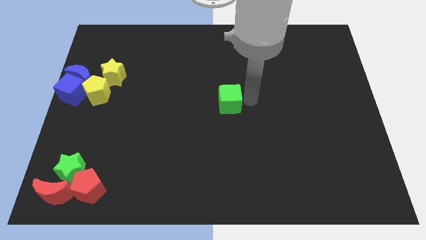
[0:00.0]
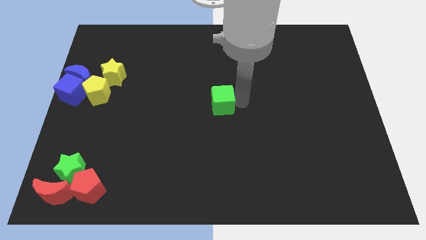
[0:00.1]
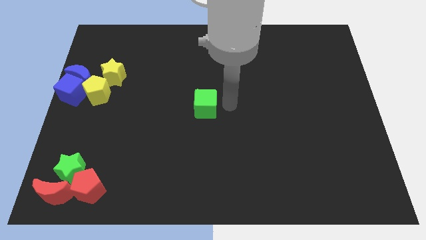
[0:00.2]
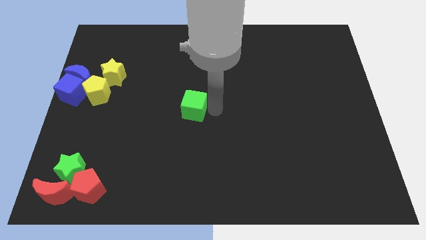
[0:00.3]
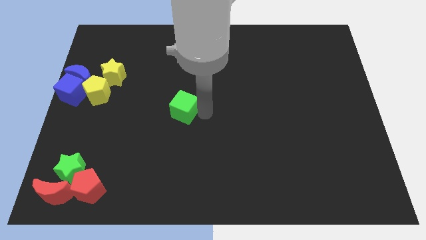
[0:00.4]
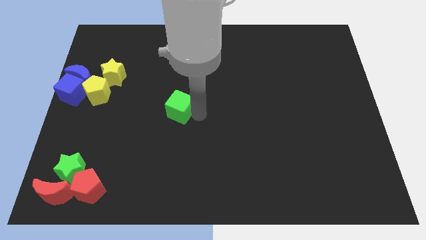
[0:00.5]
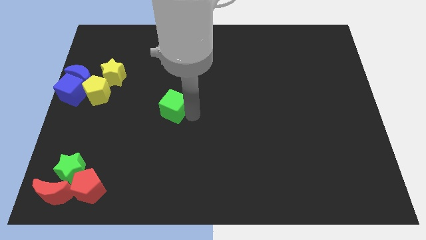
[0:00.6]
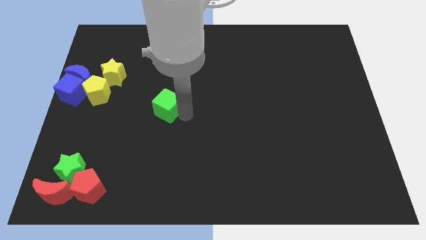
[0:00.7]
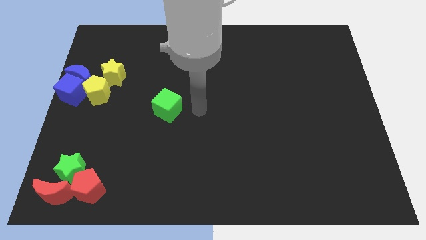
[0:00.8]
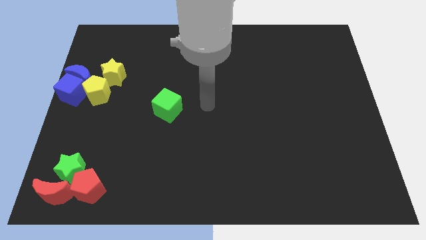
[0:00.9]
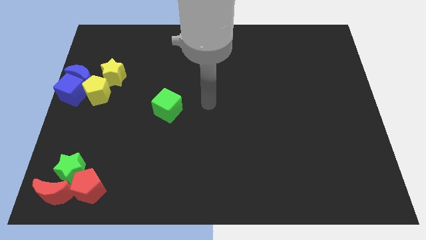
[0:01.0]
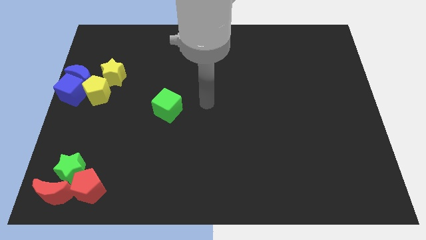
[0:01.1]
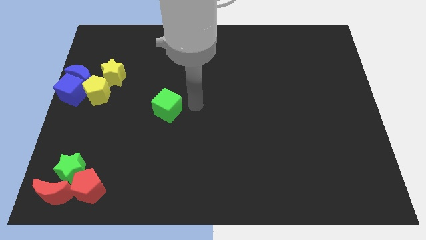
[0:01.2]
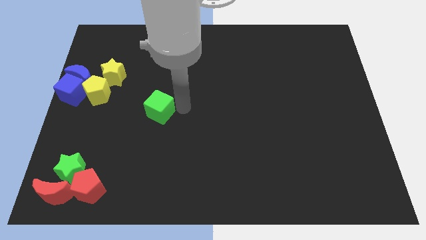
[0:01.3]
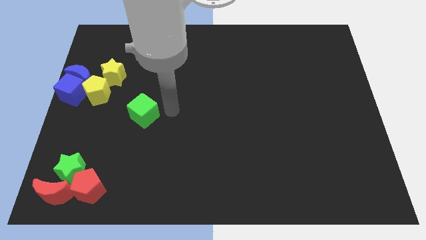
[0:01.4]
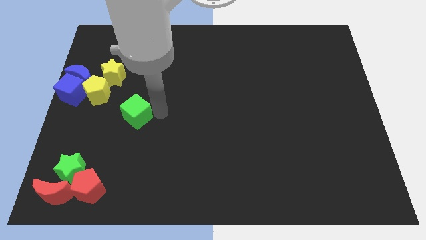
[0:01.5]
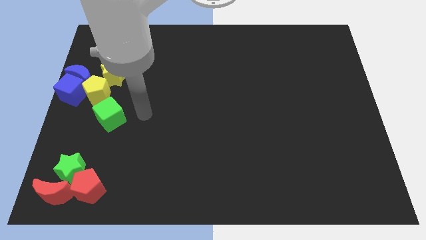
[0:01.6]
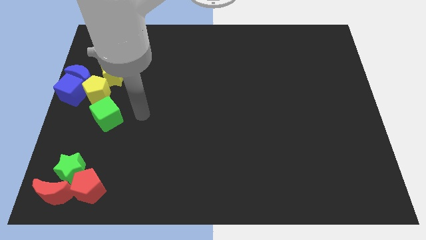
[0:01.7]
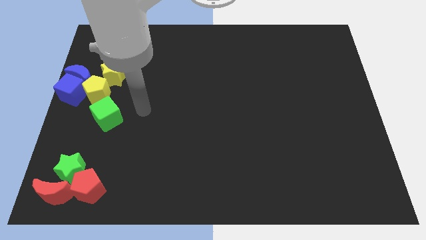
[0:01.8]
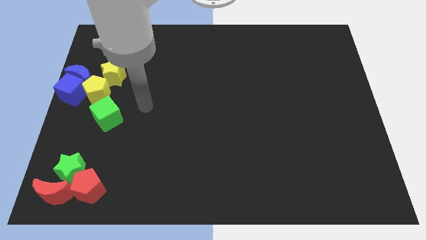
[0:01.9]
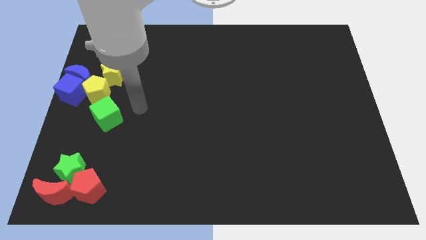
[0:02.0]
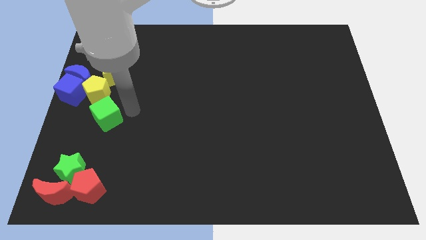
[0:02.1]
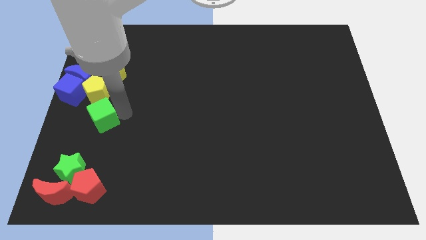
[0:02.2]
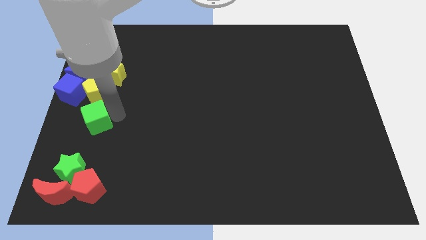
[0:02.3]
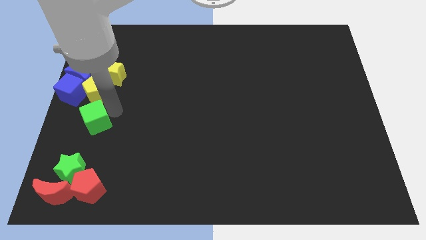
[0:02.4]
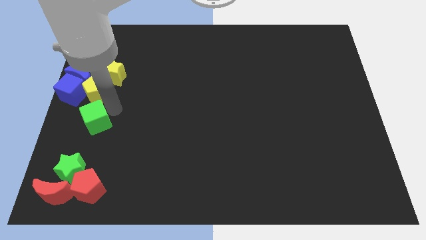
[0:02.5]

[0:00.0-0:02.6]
place the green cube to the bottom side of the yellow pentagon

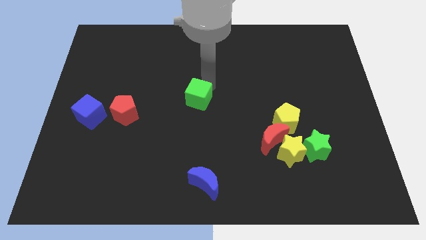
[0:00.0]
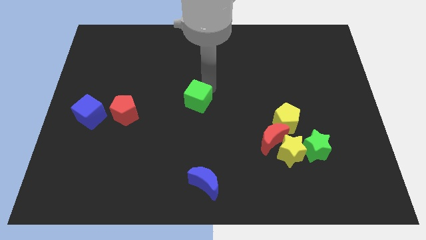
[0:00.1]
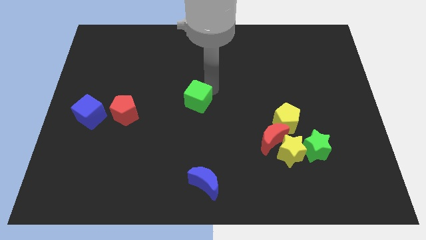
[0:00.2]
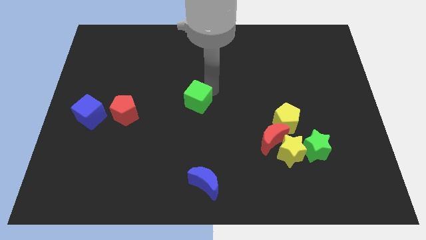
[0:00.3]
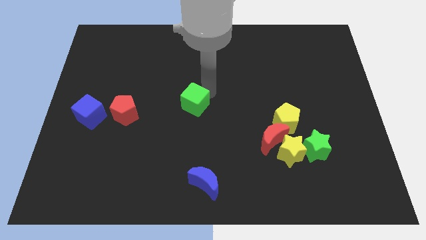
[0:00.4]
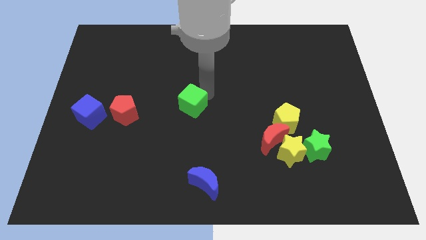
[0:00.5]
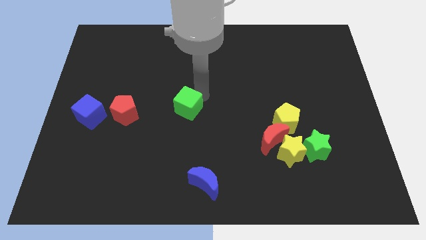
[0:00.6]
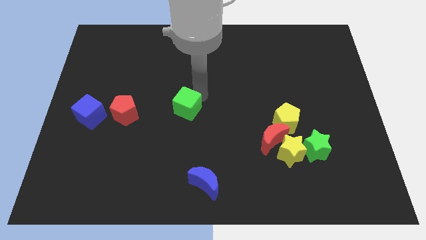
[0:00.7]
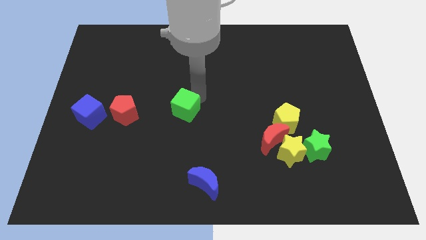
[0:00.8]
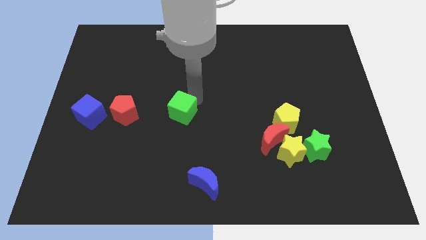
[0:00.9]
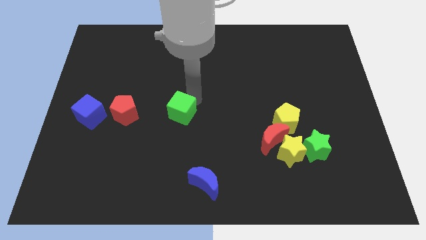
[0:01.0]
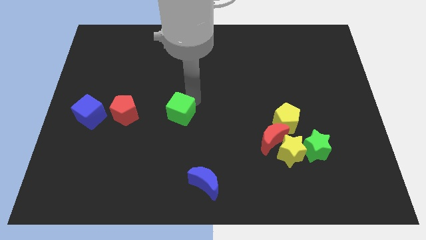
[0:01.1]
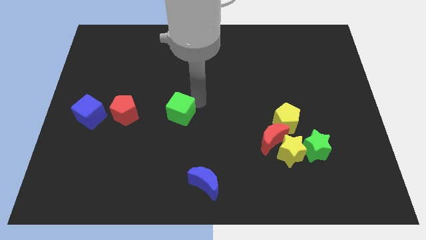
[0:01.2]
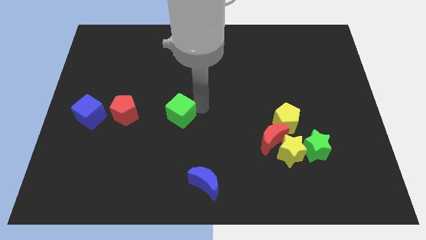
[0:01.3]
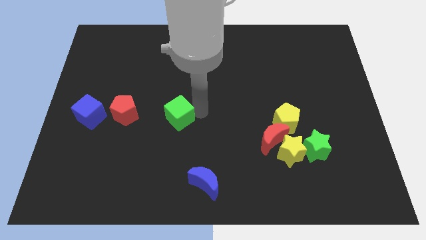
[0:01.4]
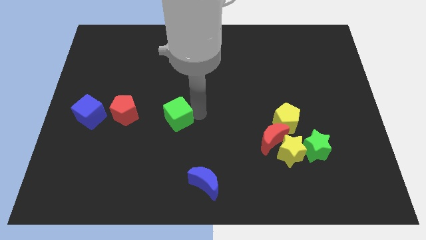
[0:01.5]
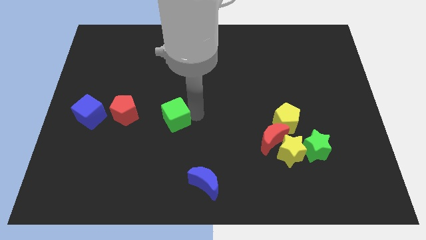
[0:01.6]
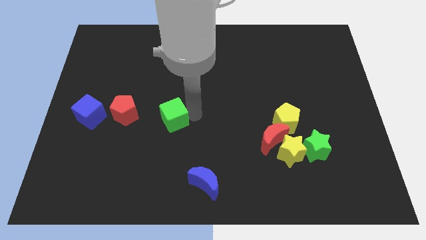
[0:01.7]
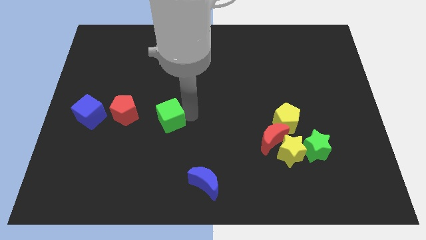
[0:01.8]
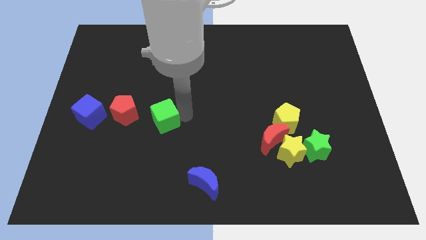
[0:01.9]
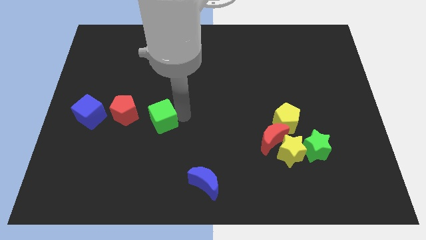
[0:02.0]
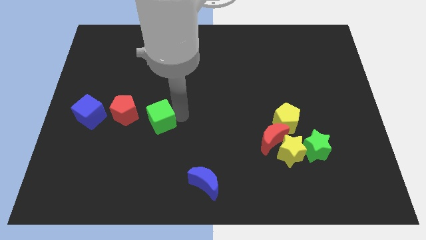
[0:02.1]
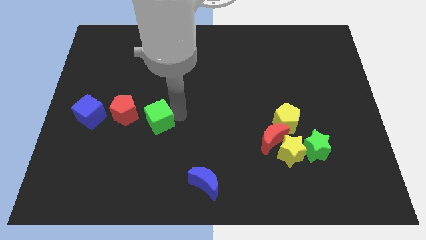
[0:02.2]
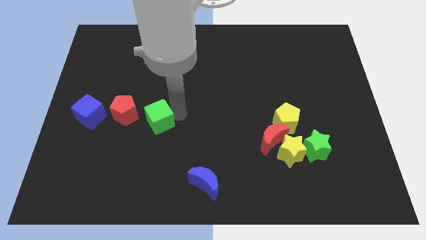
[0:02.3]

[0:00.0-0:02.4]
place green cube diagonal to red pentagon

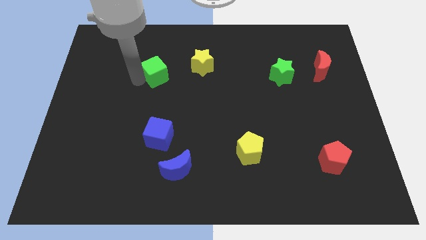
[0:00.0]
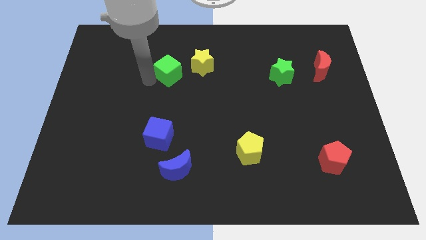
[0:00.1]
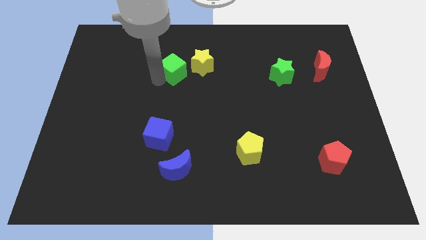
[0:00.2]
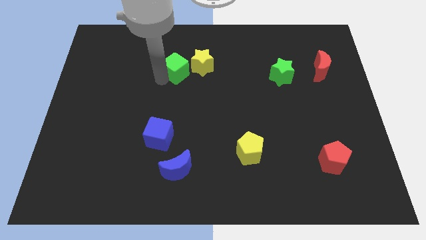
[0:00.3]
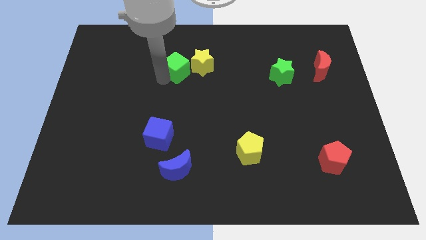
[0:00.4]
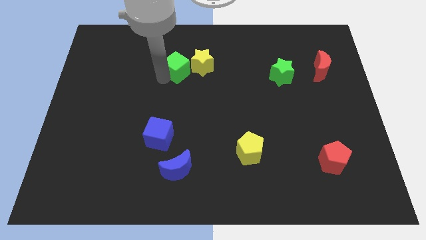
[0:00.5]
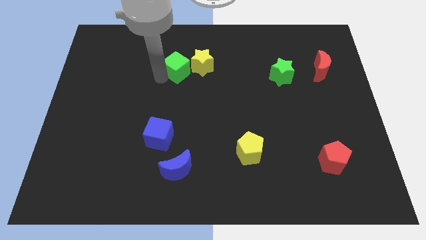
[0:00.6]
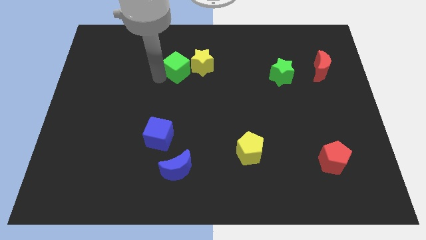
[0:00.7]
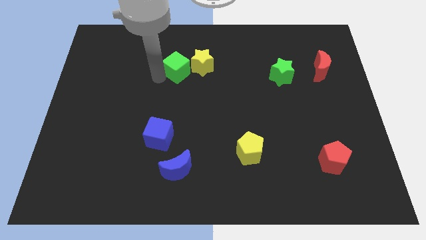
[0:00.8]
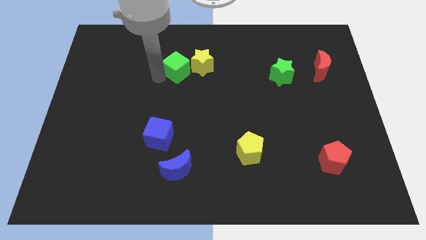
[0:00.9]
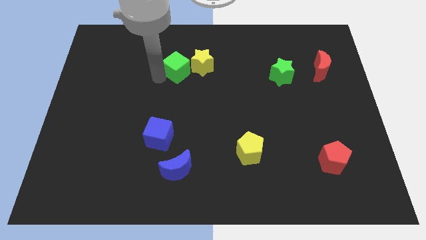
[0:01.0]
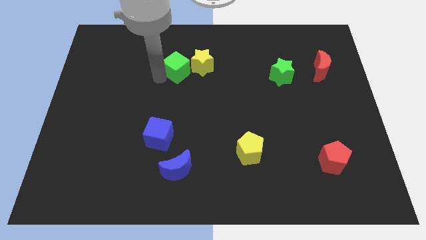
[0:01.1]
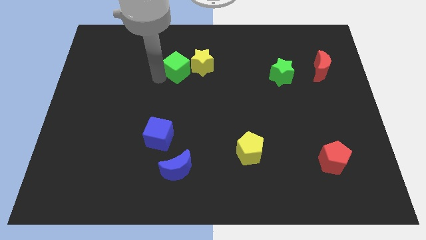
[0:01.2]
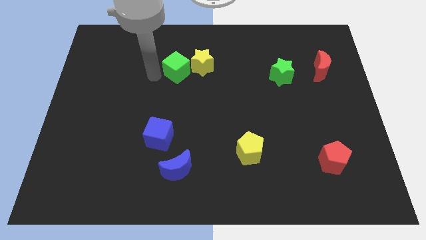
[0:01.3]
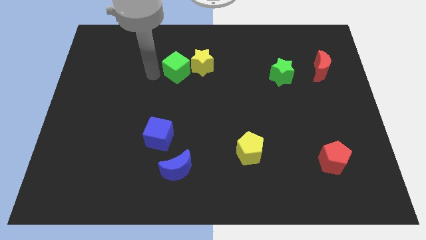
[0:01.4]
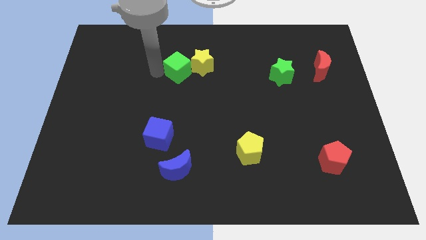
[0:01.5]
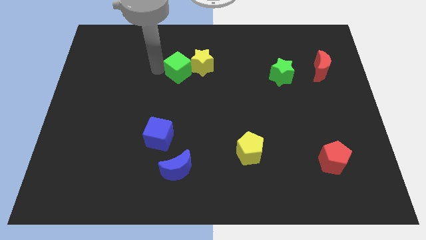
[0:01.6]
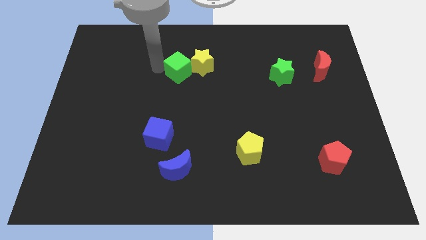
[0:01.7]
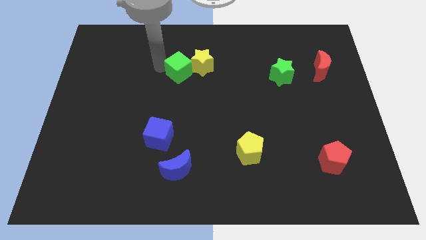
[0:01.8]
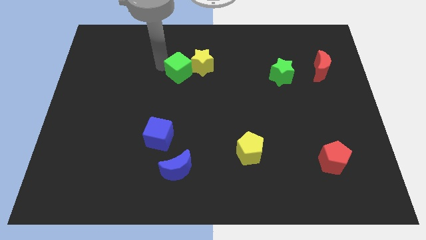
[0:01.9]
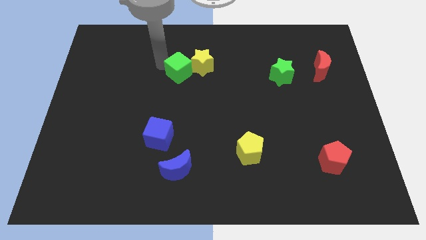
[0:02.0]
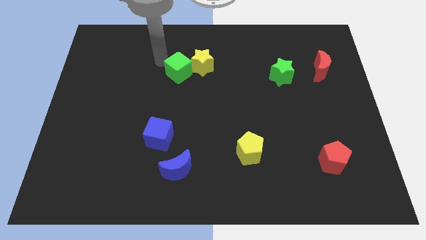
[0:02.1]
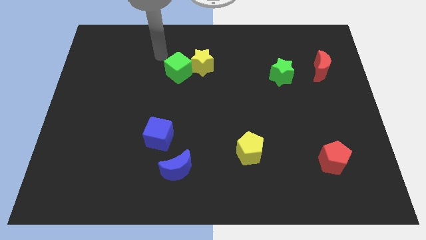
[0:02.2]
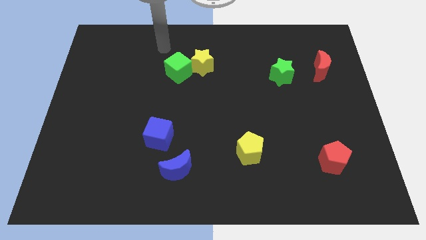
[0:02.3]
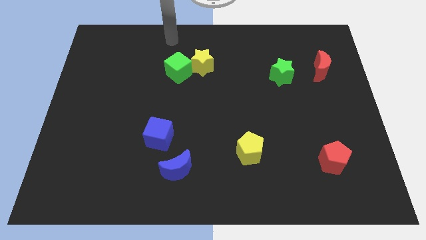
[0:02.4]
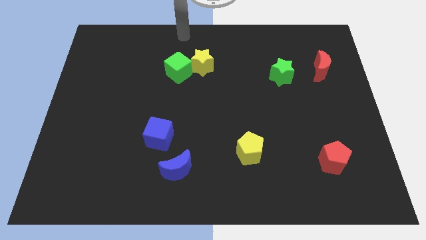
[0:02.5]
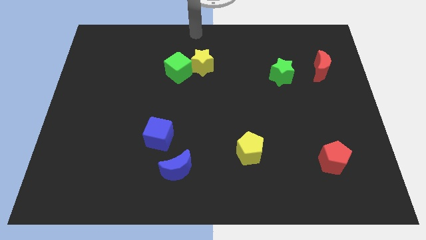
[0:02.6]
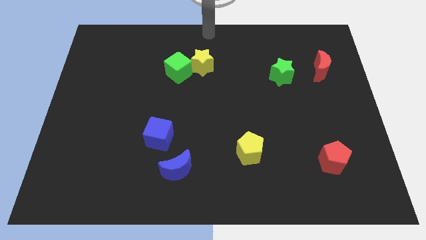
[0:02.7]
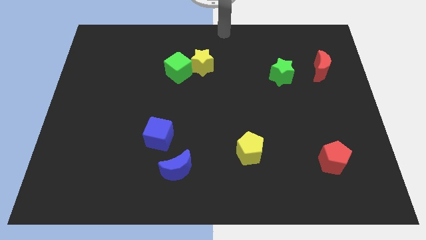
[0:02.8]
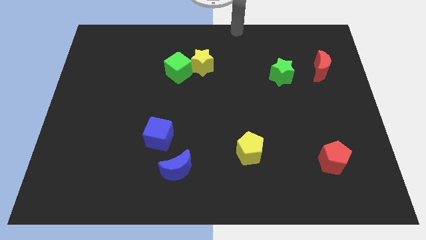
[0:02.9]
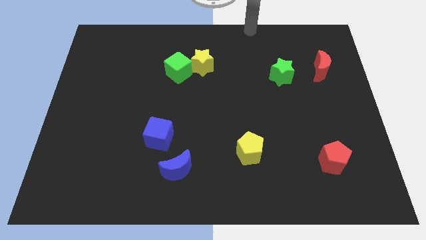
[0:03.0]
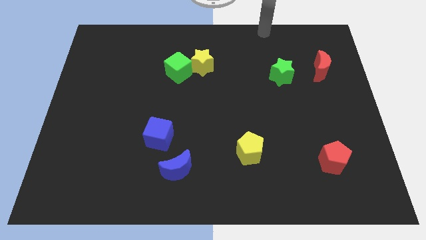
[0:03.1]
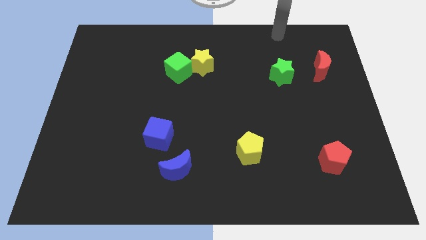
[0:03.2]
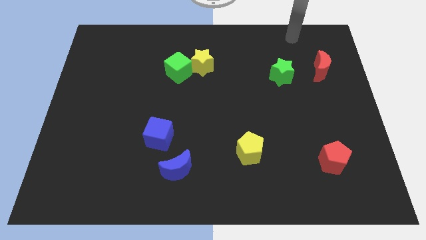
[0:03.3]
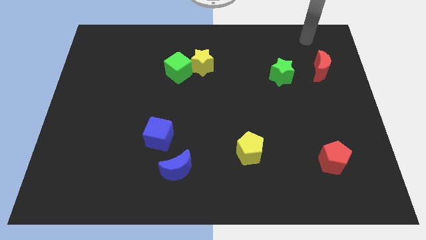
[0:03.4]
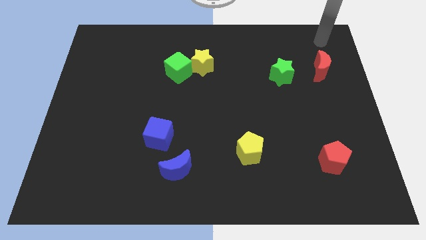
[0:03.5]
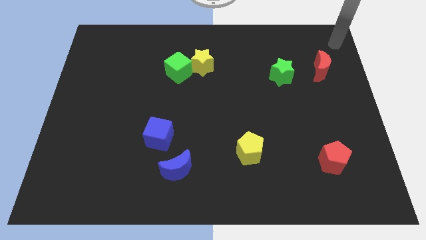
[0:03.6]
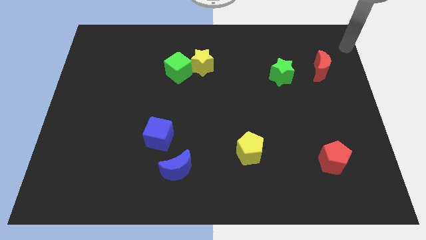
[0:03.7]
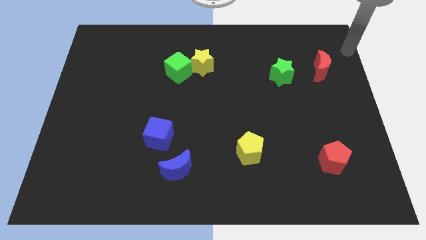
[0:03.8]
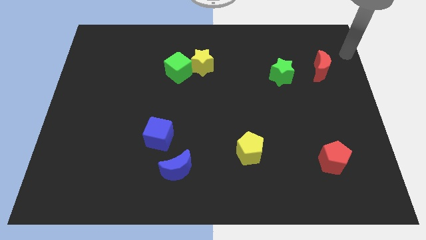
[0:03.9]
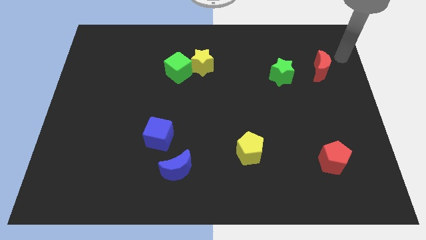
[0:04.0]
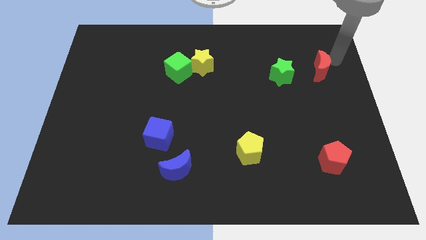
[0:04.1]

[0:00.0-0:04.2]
move your arm towards the red crescent
